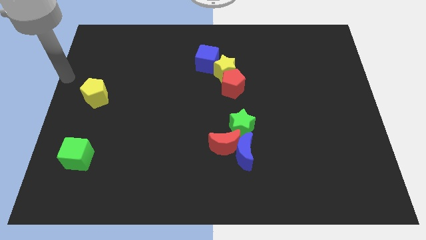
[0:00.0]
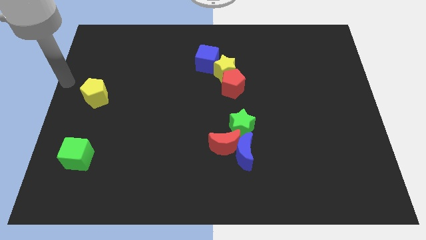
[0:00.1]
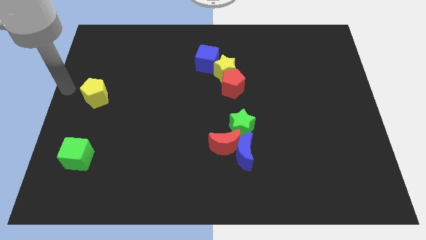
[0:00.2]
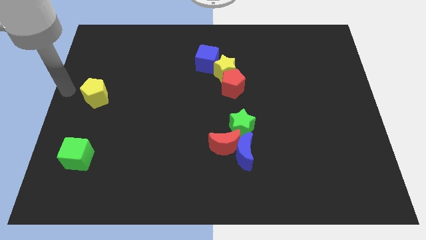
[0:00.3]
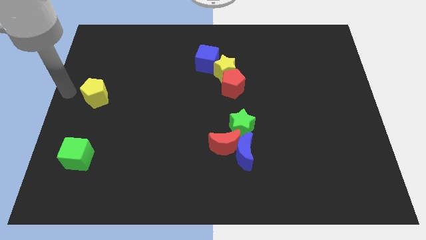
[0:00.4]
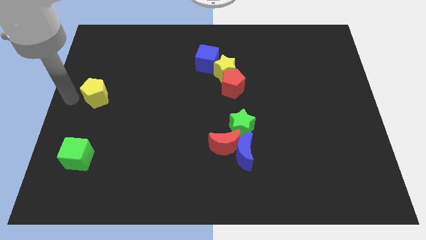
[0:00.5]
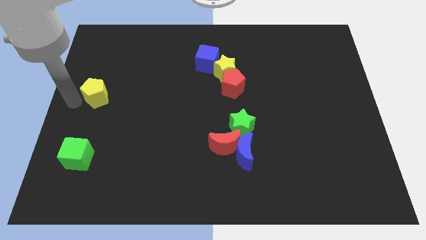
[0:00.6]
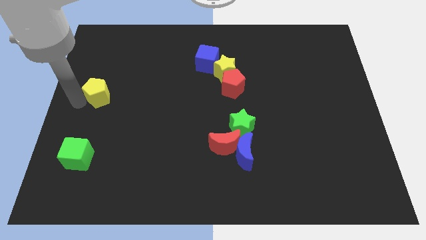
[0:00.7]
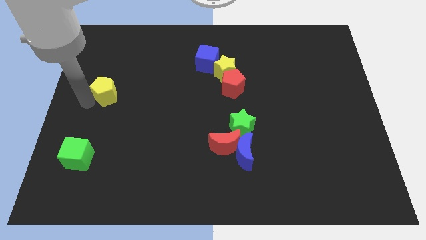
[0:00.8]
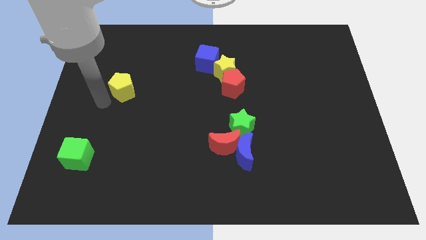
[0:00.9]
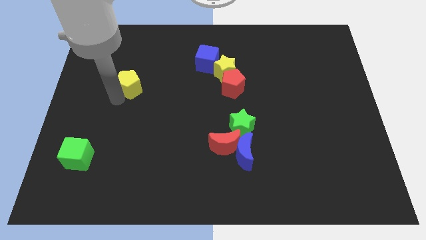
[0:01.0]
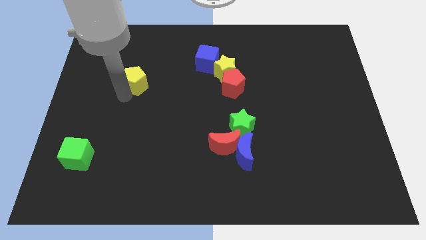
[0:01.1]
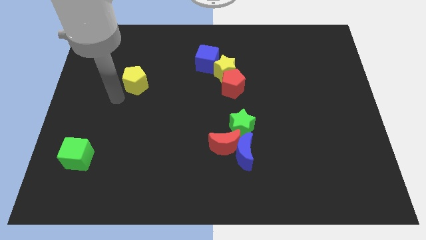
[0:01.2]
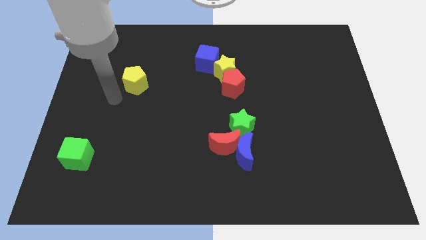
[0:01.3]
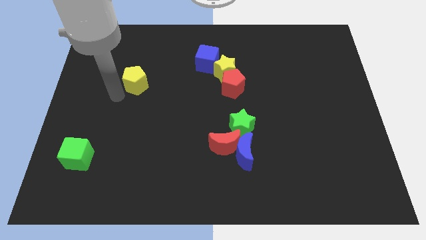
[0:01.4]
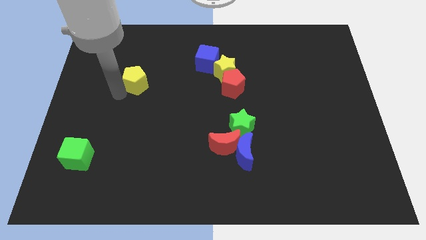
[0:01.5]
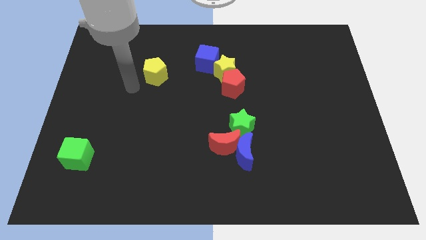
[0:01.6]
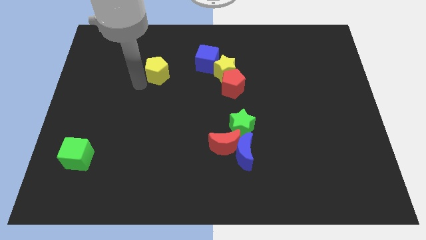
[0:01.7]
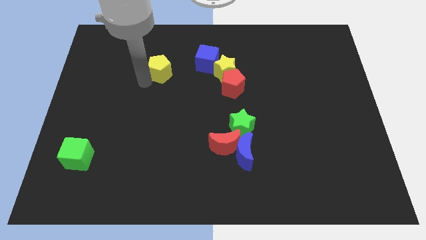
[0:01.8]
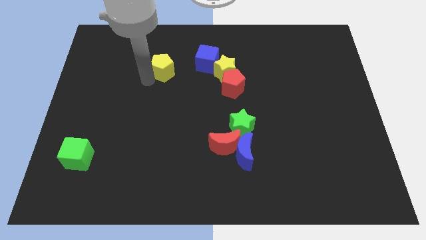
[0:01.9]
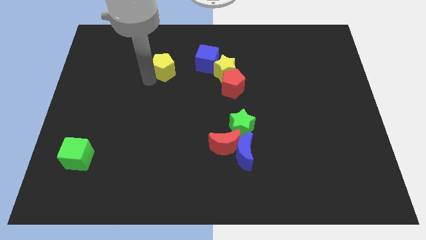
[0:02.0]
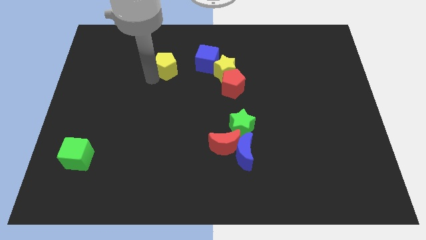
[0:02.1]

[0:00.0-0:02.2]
place yellow pentagon to the left of yellow star

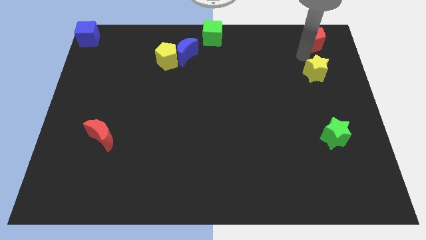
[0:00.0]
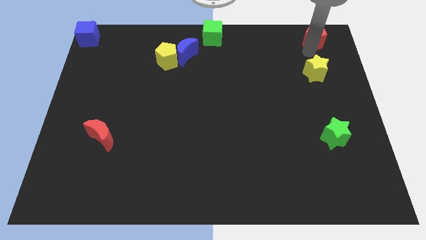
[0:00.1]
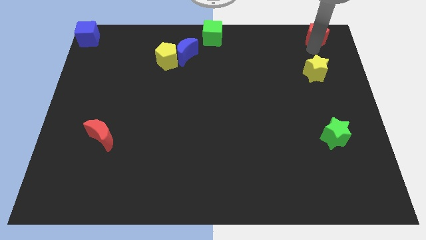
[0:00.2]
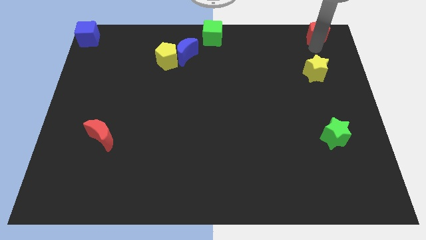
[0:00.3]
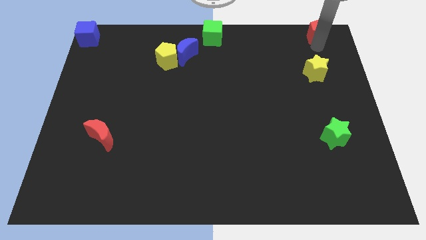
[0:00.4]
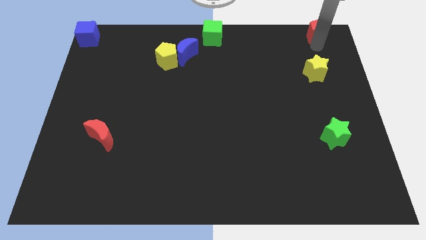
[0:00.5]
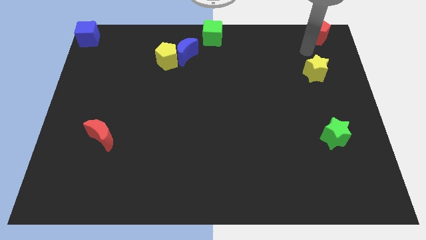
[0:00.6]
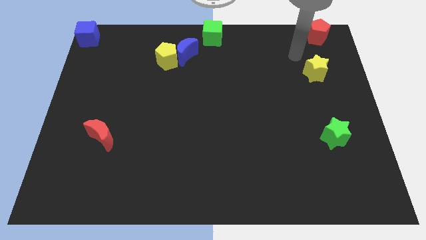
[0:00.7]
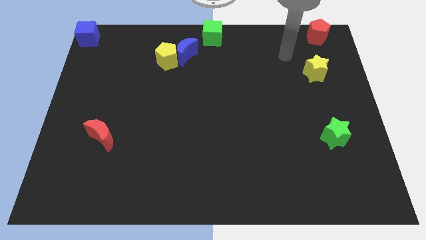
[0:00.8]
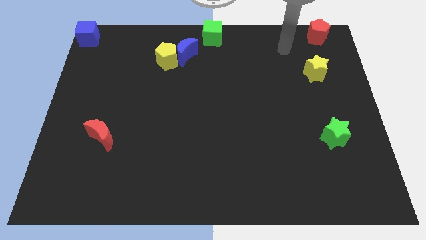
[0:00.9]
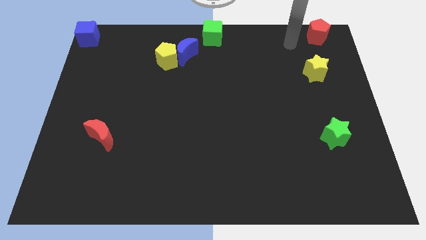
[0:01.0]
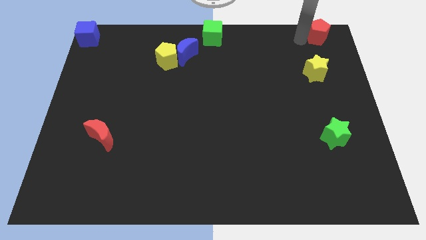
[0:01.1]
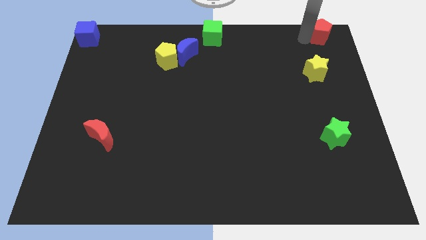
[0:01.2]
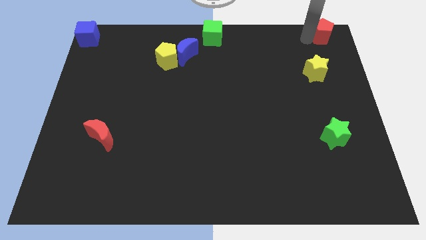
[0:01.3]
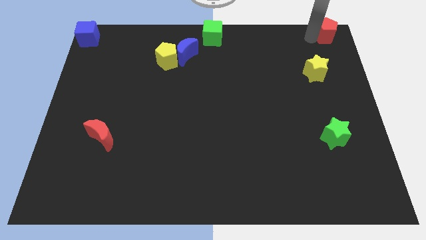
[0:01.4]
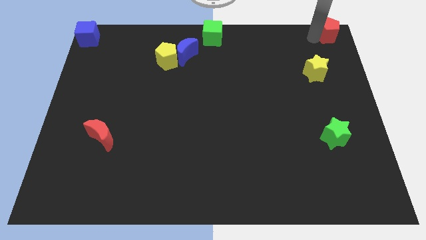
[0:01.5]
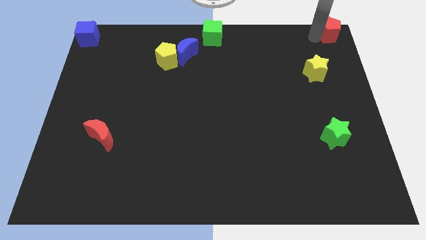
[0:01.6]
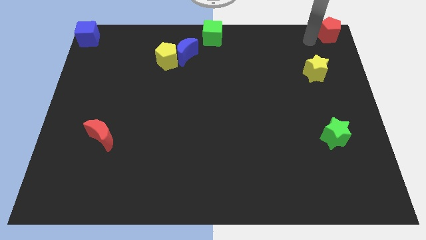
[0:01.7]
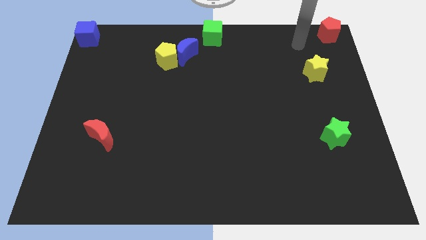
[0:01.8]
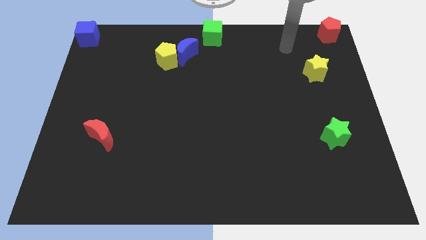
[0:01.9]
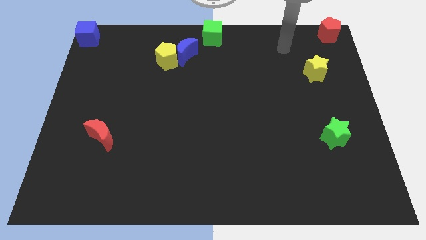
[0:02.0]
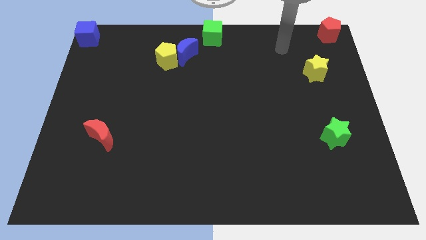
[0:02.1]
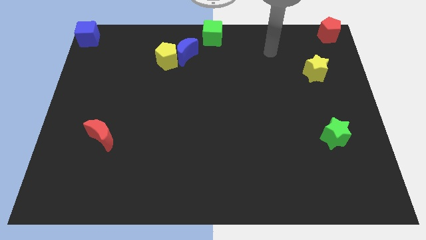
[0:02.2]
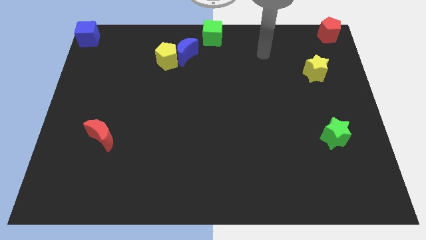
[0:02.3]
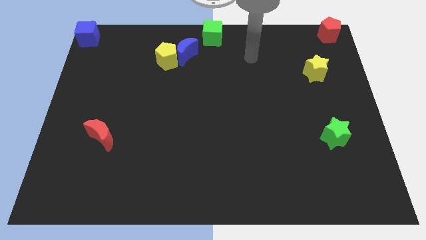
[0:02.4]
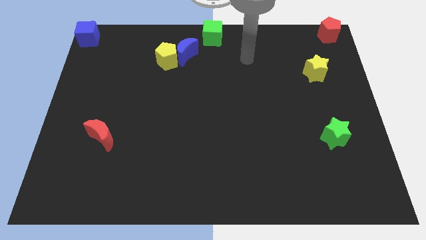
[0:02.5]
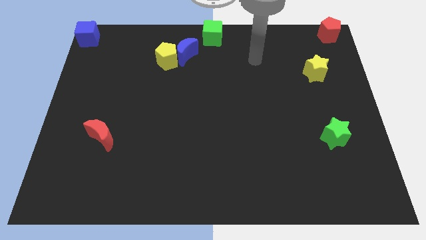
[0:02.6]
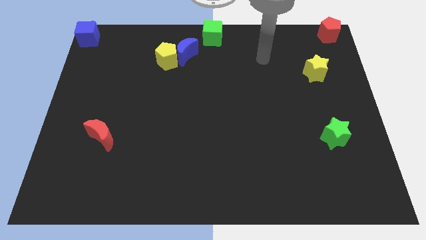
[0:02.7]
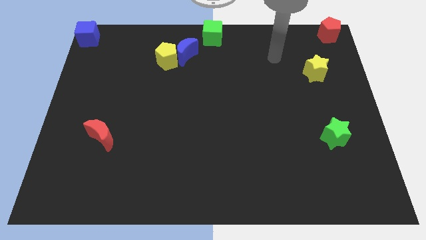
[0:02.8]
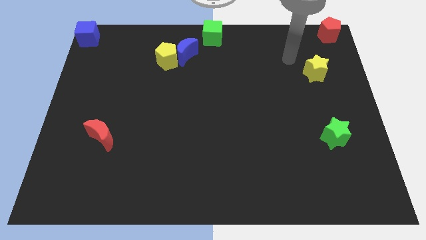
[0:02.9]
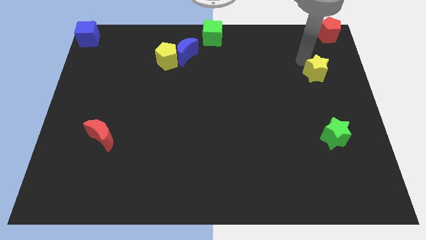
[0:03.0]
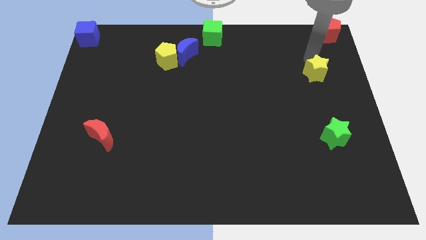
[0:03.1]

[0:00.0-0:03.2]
push the red pentagon to top right corner

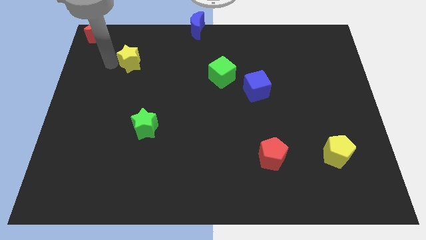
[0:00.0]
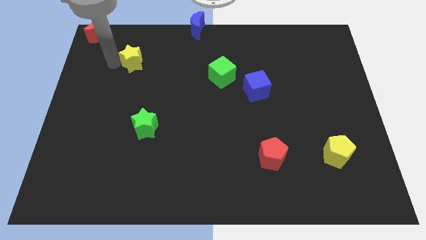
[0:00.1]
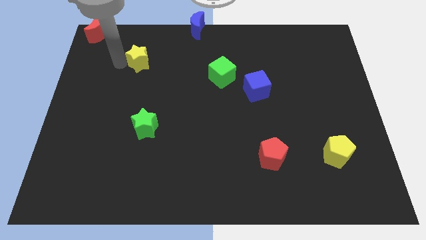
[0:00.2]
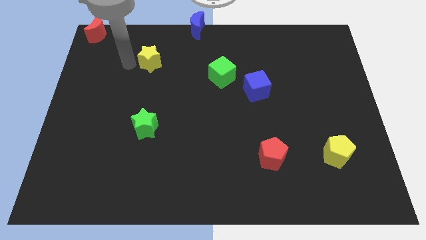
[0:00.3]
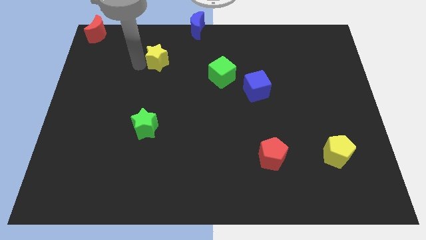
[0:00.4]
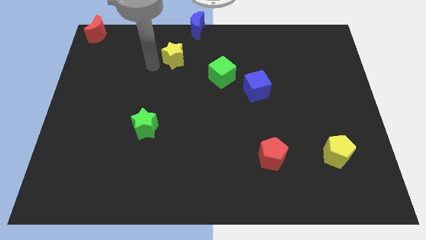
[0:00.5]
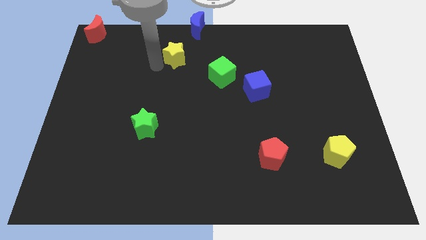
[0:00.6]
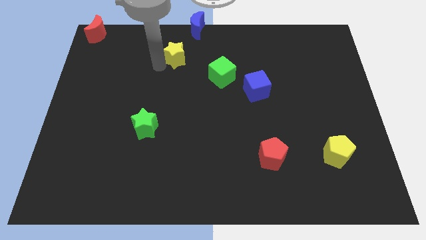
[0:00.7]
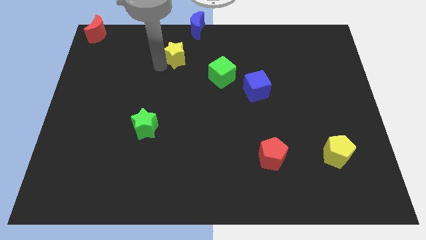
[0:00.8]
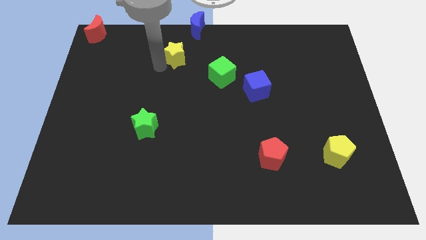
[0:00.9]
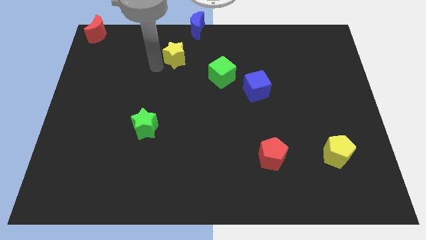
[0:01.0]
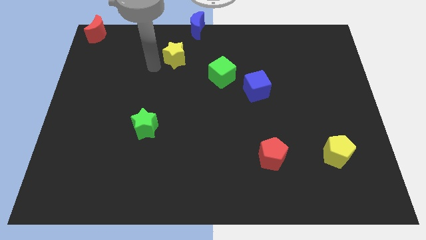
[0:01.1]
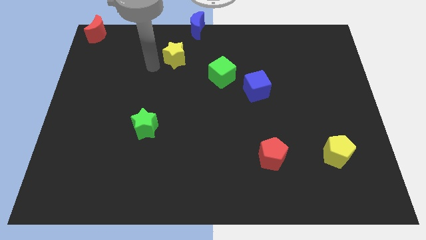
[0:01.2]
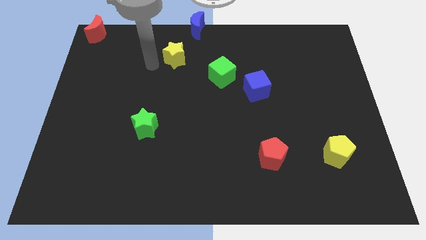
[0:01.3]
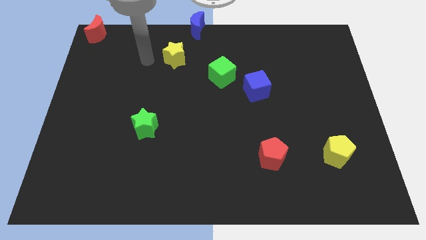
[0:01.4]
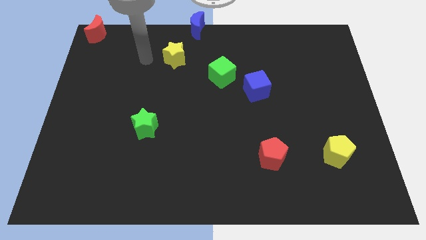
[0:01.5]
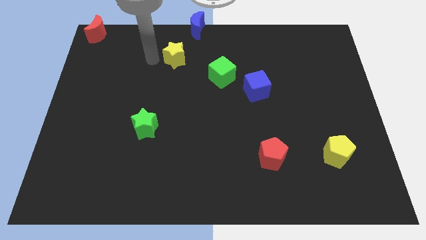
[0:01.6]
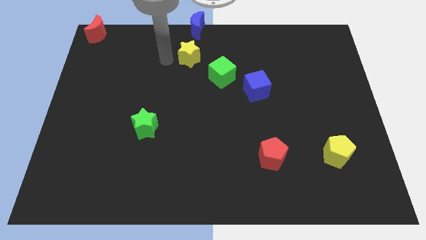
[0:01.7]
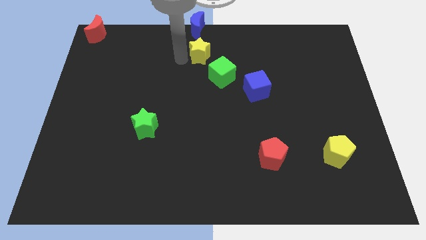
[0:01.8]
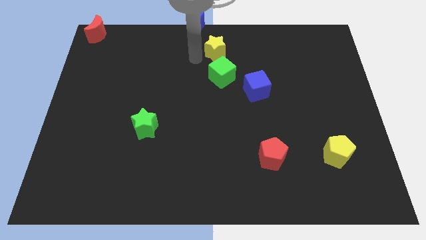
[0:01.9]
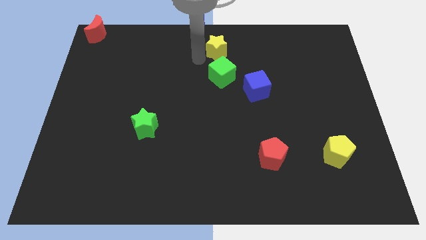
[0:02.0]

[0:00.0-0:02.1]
place yellow star on top of green cube

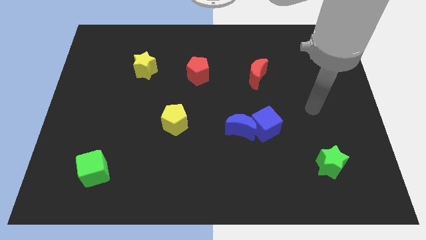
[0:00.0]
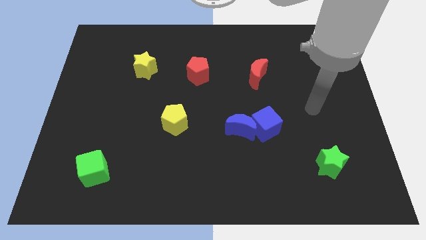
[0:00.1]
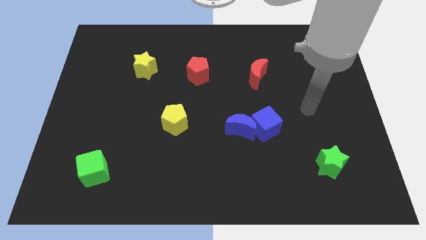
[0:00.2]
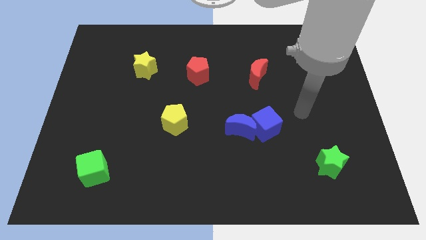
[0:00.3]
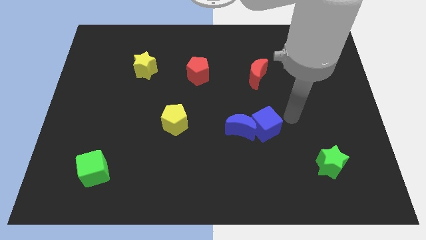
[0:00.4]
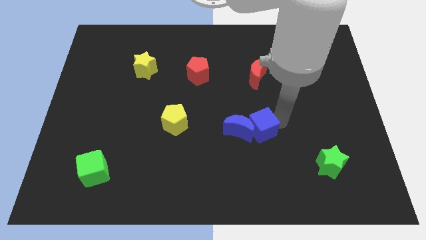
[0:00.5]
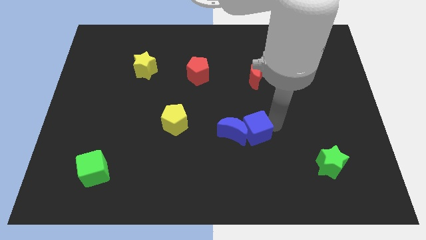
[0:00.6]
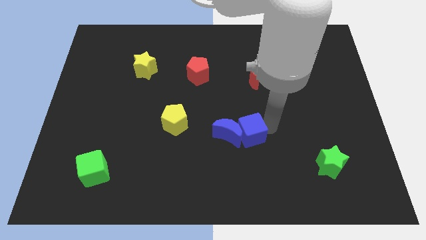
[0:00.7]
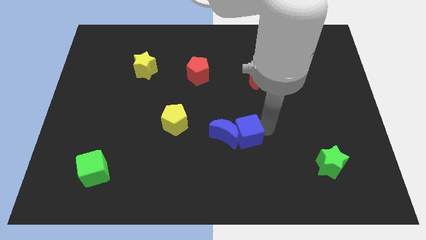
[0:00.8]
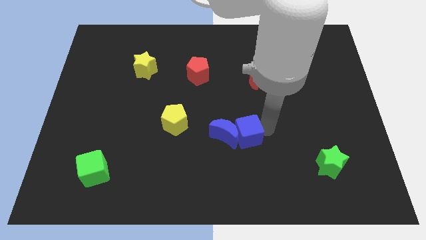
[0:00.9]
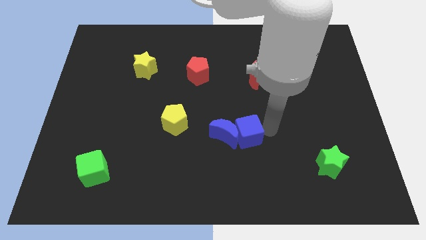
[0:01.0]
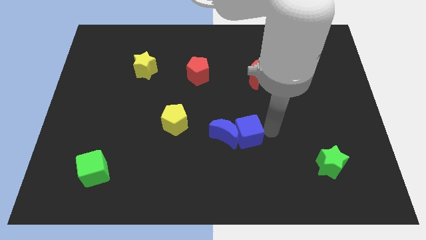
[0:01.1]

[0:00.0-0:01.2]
push the blue blocks slightly to the left

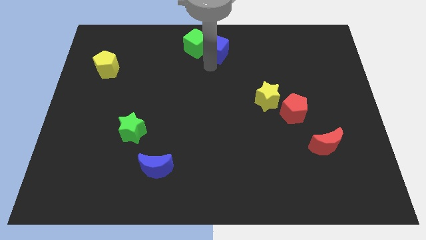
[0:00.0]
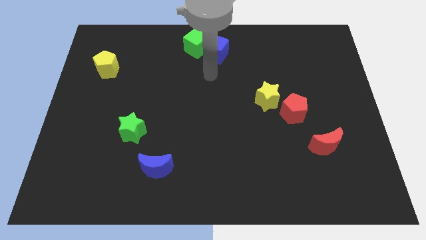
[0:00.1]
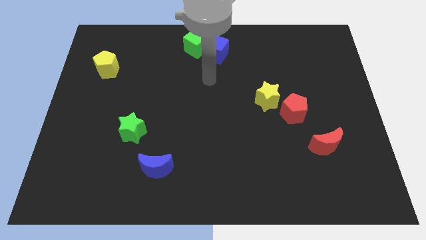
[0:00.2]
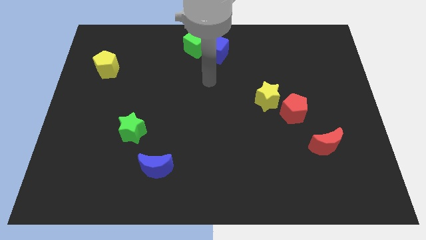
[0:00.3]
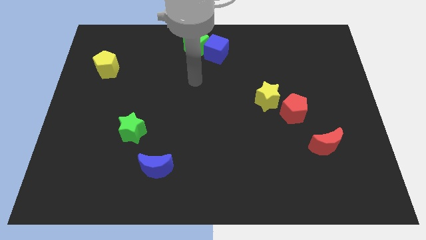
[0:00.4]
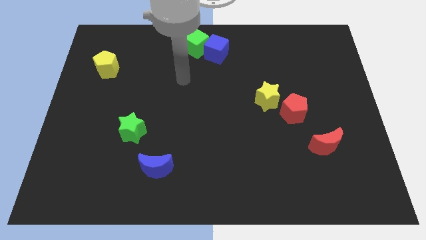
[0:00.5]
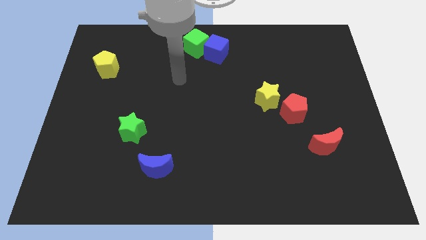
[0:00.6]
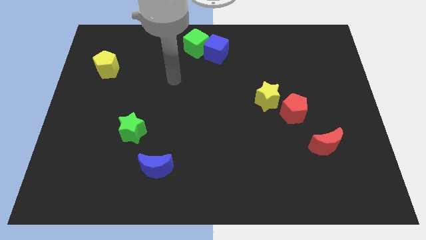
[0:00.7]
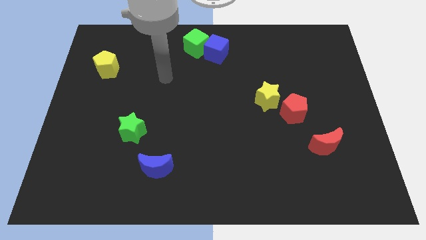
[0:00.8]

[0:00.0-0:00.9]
place blue cube adjacent to green cube
